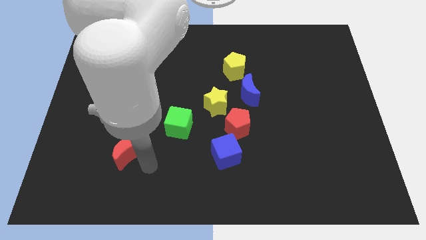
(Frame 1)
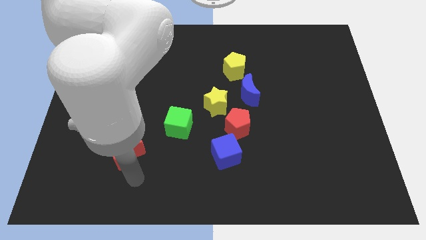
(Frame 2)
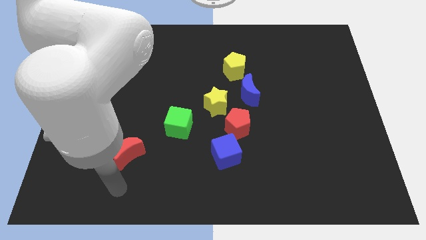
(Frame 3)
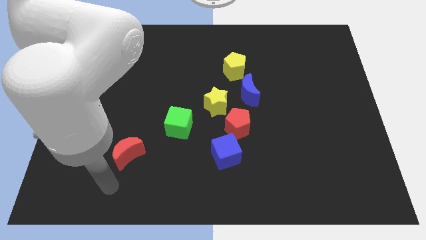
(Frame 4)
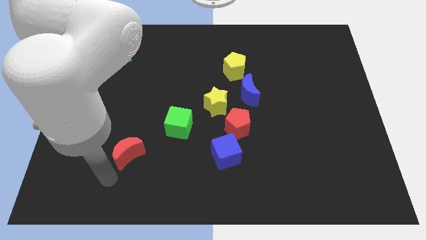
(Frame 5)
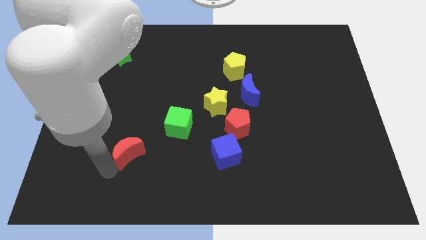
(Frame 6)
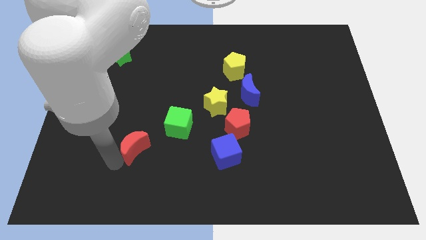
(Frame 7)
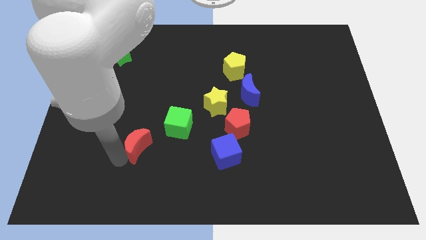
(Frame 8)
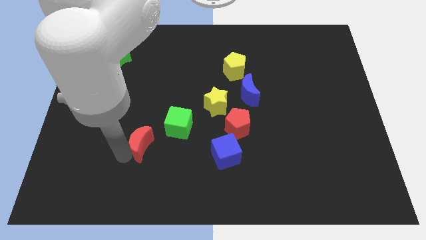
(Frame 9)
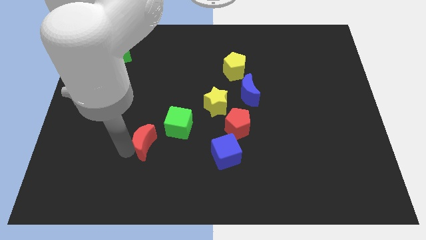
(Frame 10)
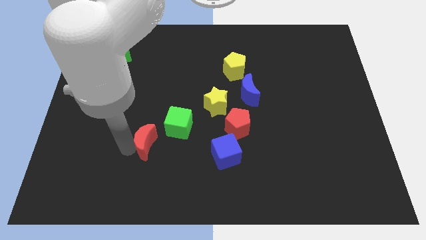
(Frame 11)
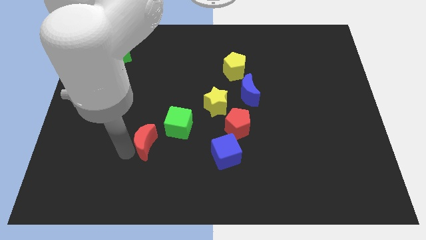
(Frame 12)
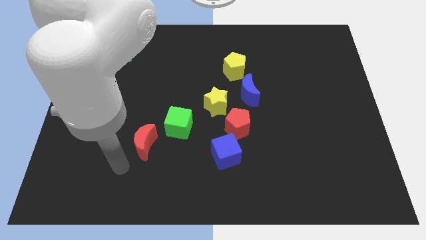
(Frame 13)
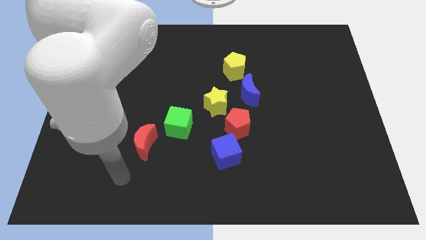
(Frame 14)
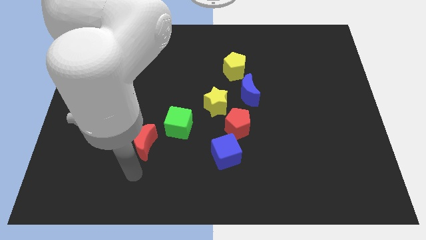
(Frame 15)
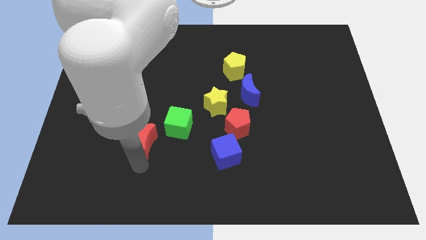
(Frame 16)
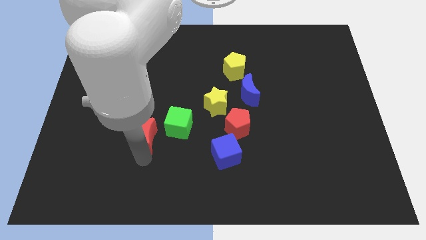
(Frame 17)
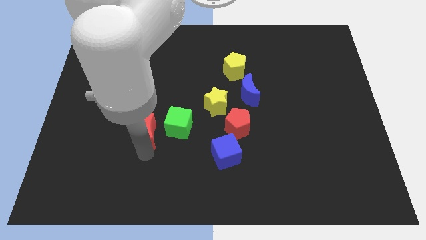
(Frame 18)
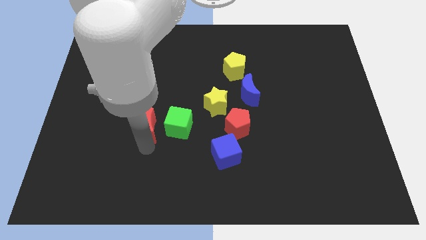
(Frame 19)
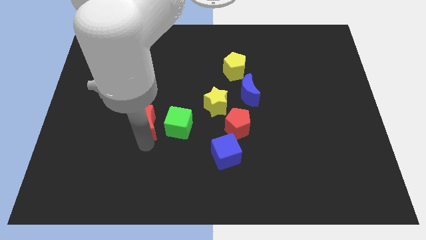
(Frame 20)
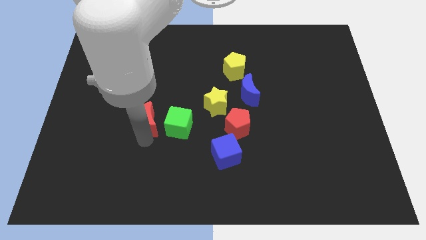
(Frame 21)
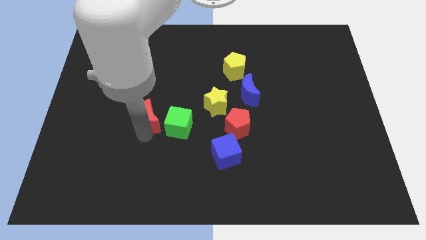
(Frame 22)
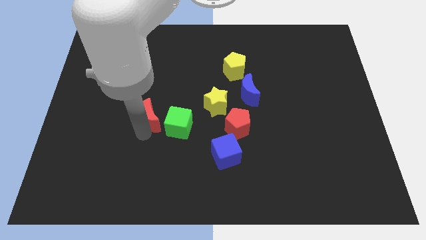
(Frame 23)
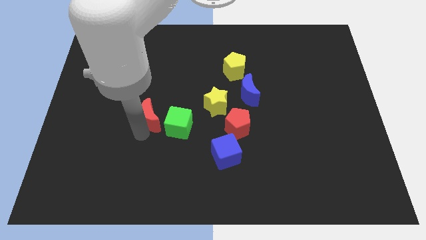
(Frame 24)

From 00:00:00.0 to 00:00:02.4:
move the red crescent to the left of green cube

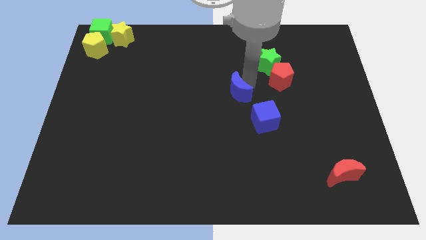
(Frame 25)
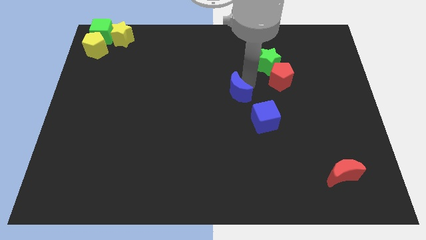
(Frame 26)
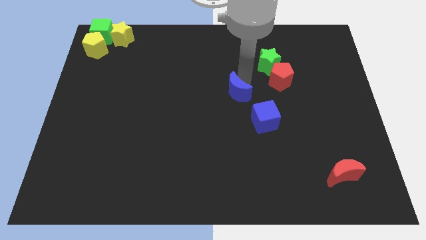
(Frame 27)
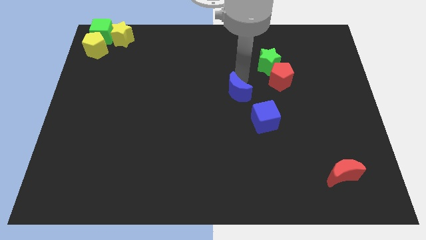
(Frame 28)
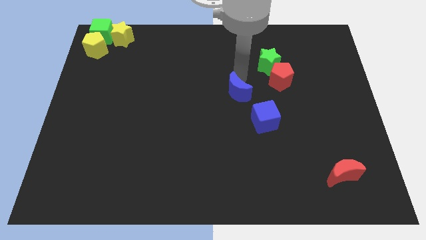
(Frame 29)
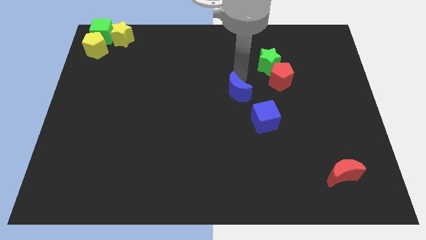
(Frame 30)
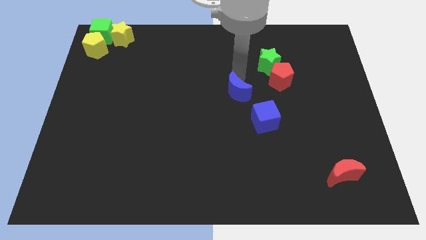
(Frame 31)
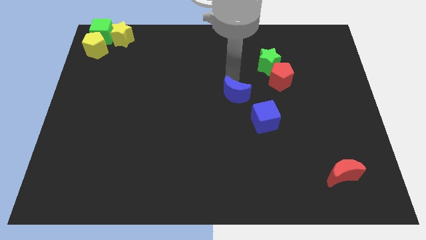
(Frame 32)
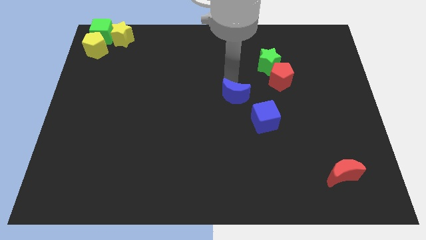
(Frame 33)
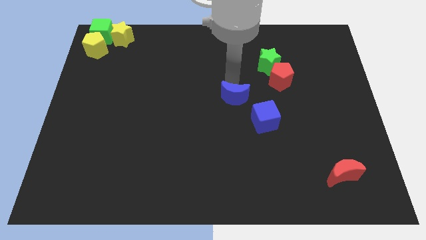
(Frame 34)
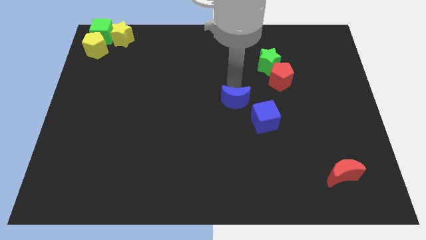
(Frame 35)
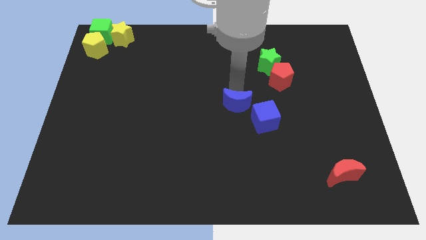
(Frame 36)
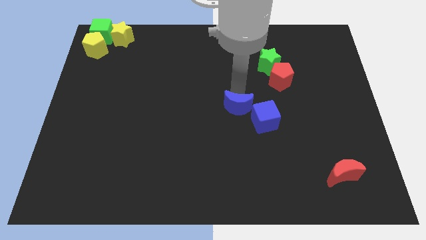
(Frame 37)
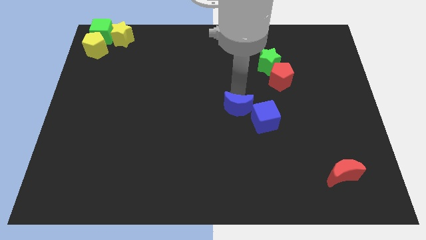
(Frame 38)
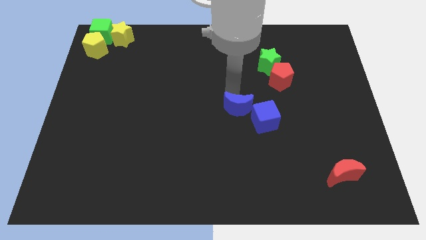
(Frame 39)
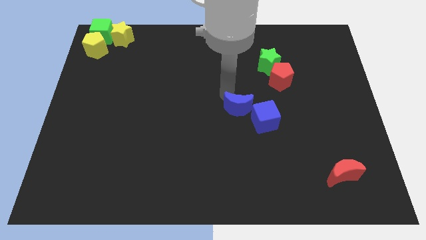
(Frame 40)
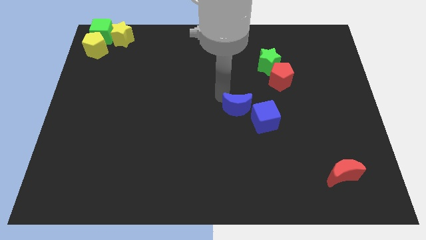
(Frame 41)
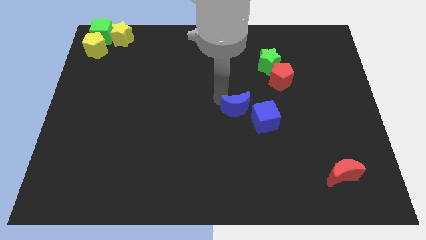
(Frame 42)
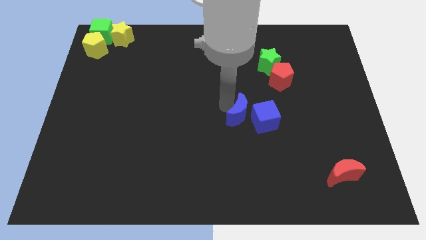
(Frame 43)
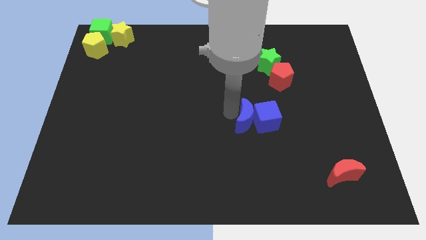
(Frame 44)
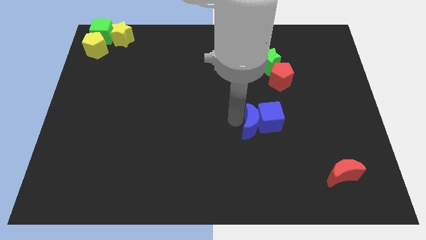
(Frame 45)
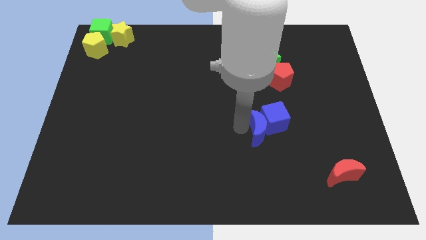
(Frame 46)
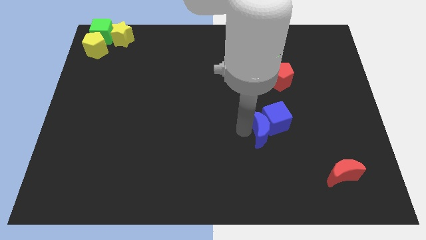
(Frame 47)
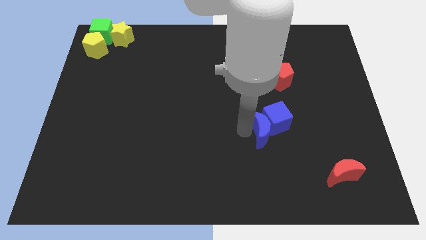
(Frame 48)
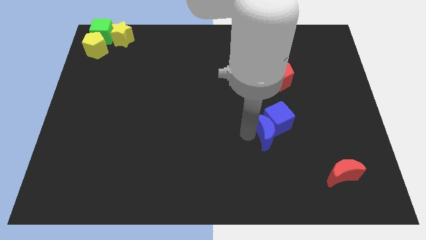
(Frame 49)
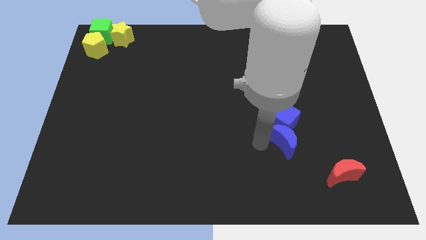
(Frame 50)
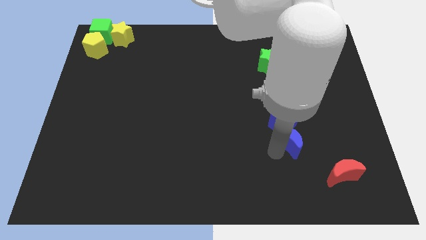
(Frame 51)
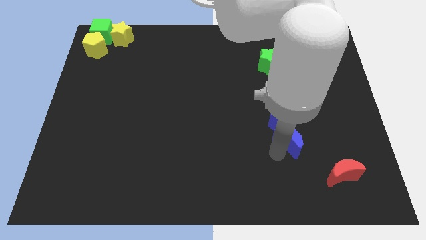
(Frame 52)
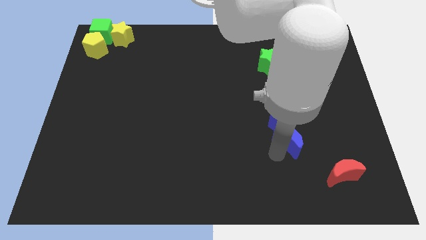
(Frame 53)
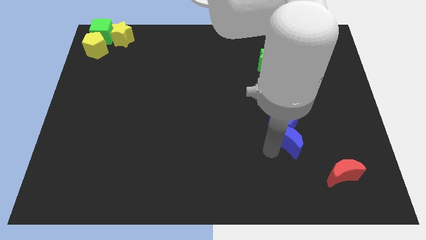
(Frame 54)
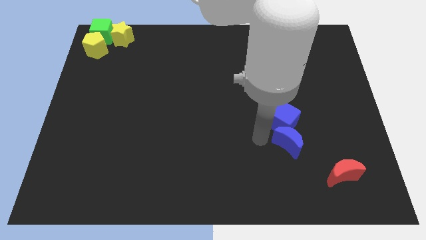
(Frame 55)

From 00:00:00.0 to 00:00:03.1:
push blue crescent below blue cube

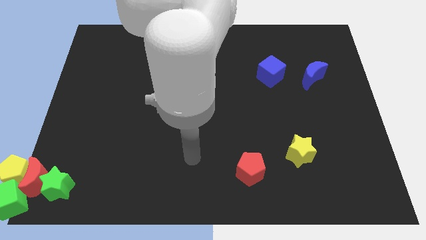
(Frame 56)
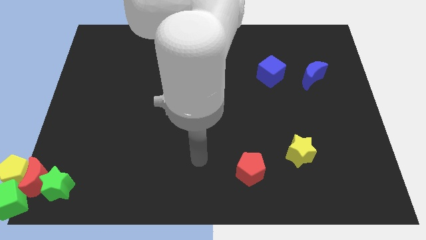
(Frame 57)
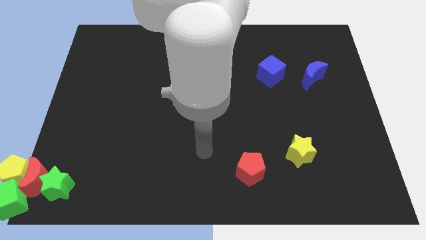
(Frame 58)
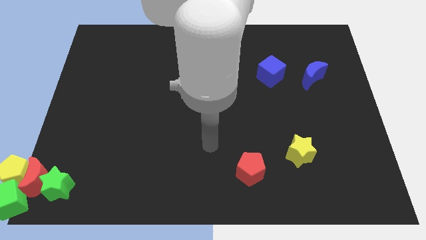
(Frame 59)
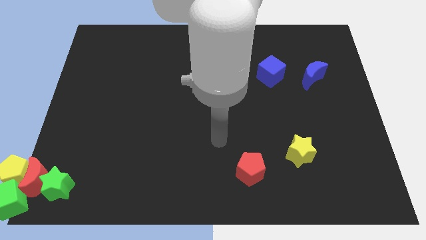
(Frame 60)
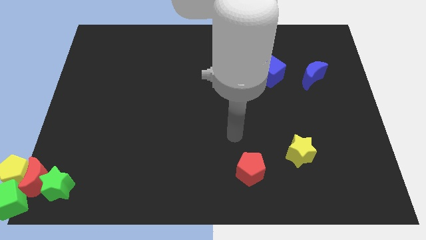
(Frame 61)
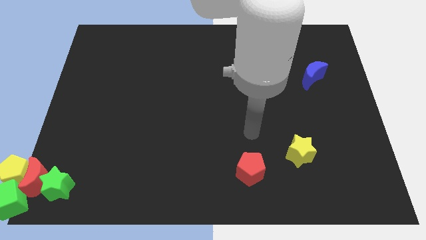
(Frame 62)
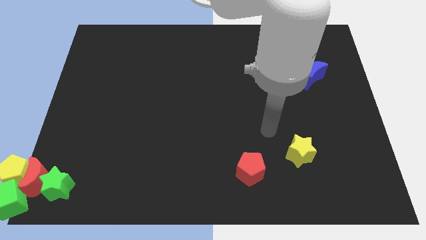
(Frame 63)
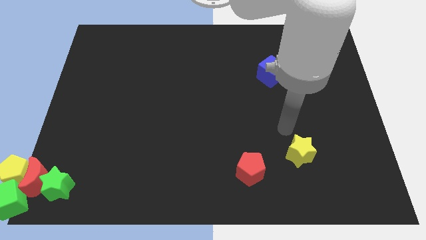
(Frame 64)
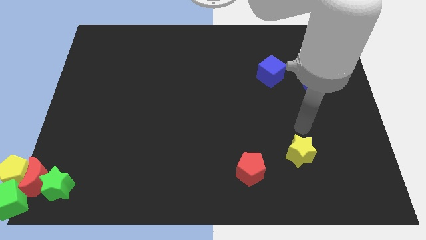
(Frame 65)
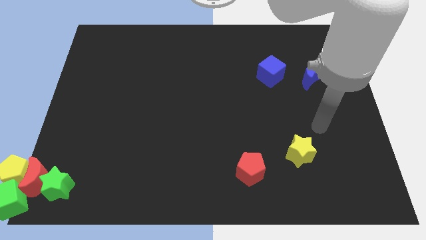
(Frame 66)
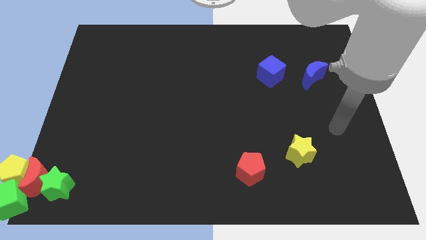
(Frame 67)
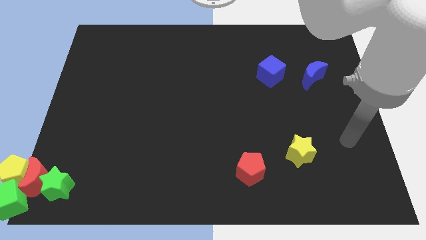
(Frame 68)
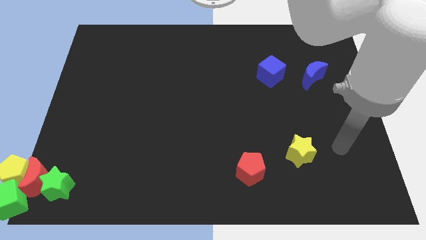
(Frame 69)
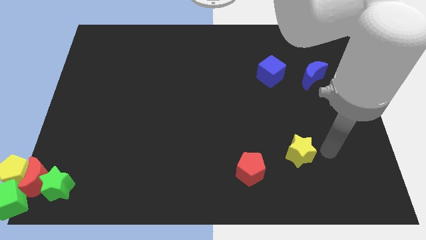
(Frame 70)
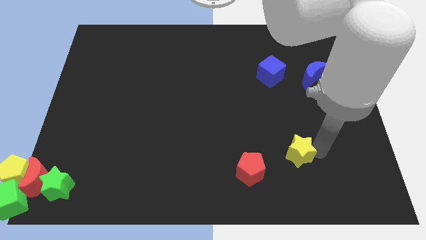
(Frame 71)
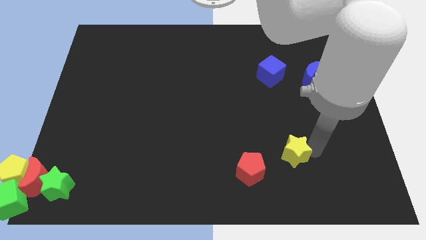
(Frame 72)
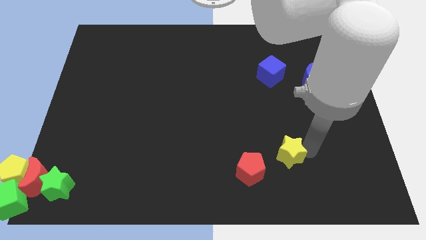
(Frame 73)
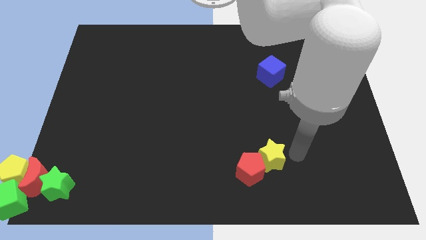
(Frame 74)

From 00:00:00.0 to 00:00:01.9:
push the yellow star to top right of red pentagon

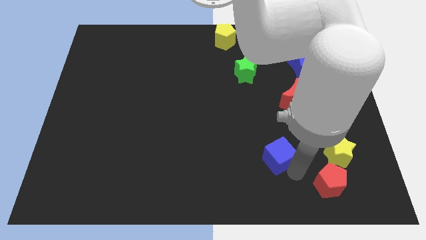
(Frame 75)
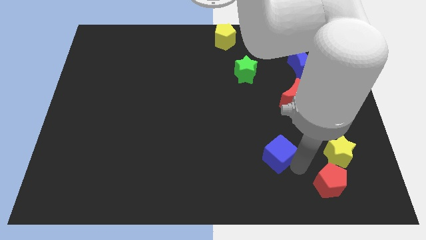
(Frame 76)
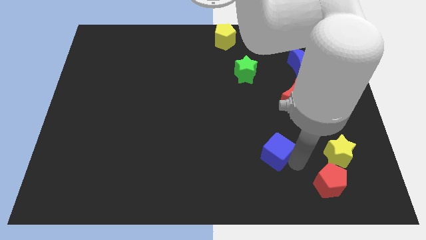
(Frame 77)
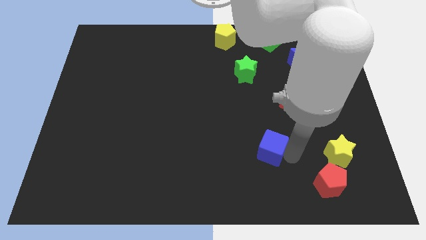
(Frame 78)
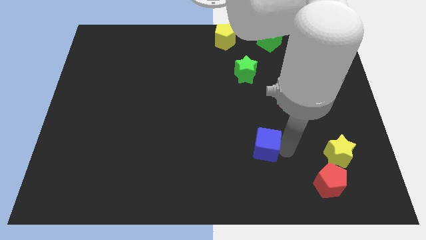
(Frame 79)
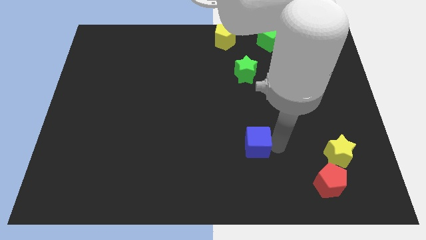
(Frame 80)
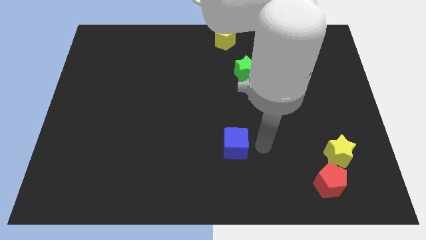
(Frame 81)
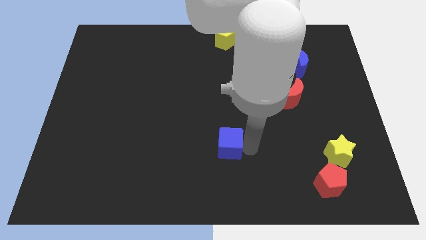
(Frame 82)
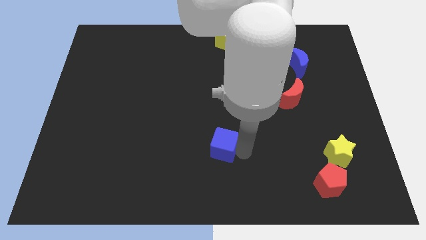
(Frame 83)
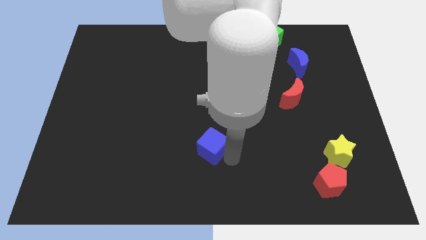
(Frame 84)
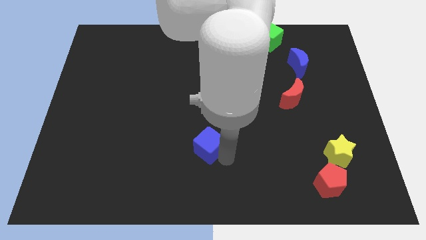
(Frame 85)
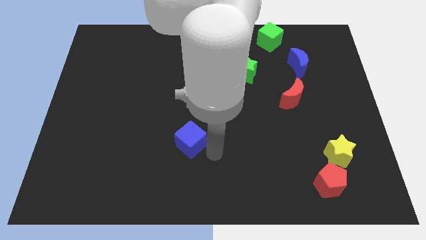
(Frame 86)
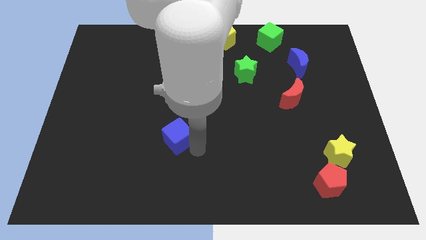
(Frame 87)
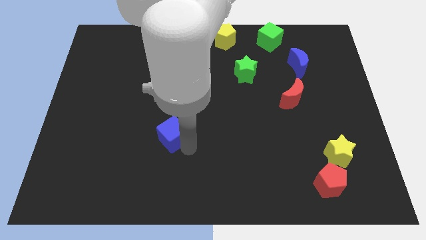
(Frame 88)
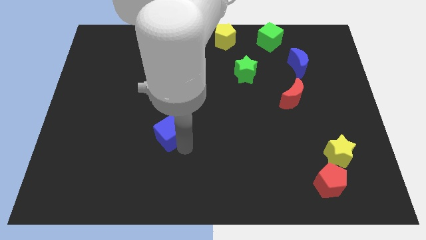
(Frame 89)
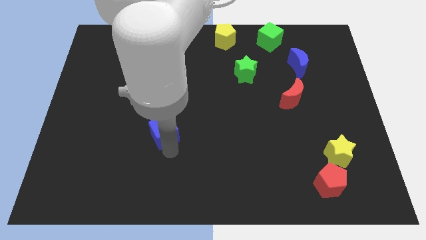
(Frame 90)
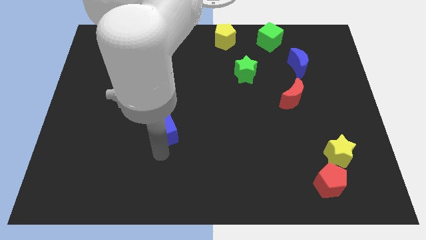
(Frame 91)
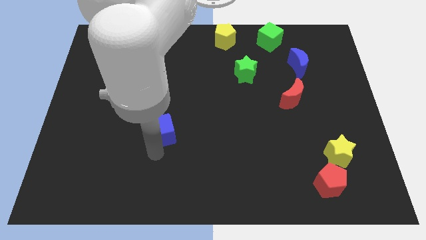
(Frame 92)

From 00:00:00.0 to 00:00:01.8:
move the blue cube slightly up
